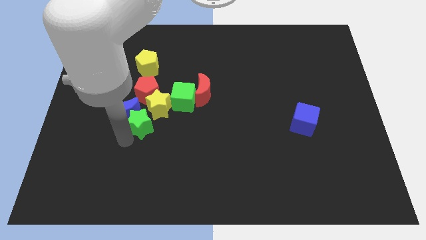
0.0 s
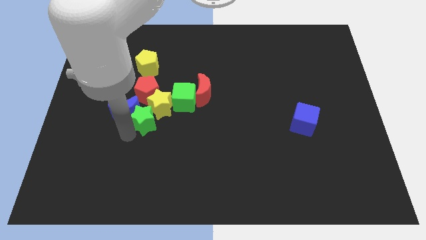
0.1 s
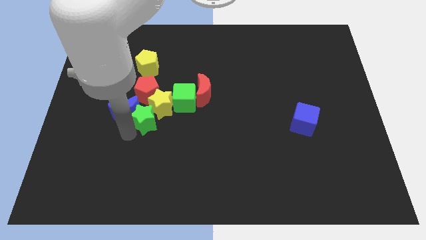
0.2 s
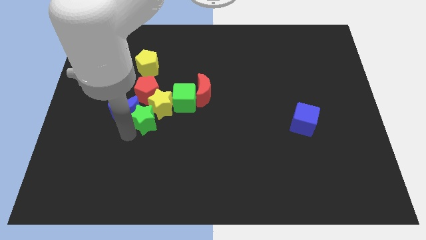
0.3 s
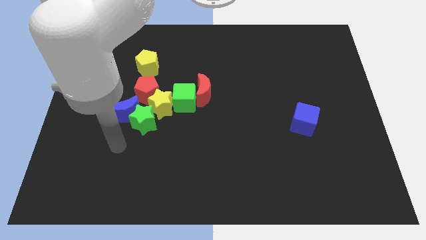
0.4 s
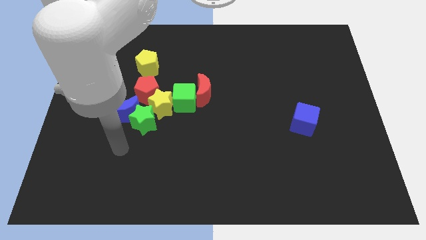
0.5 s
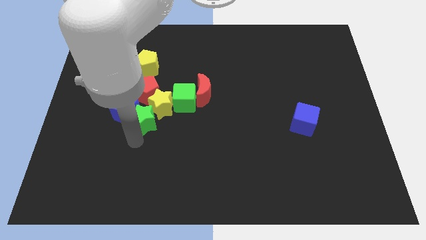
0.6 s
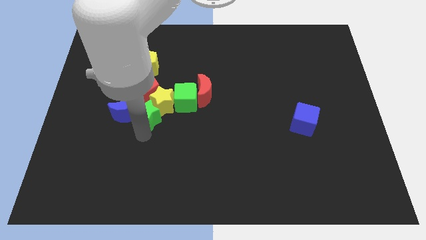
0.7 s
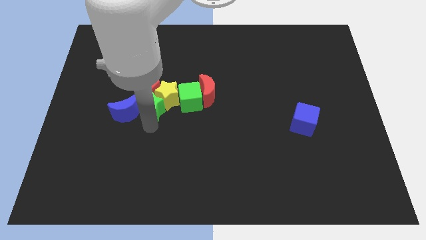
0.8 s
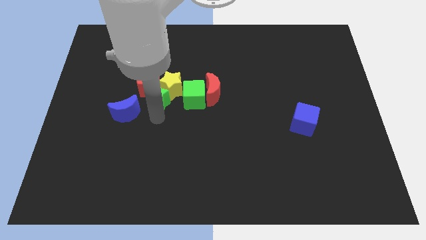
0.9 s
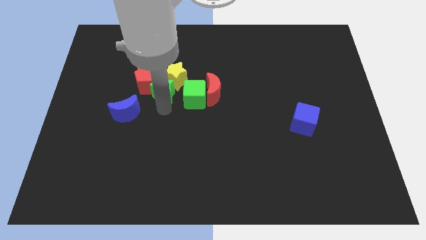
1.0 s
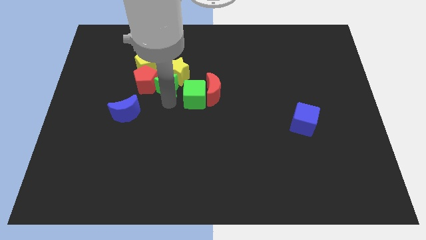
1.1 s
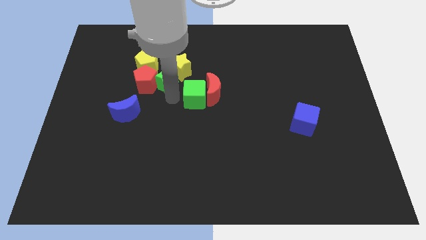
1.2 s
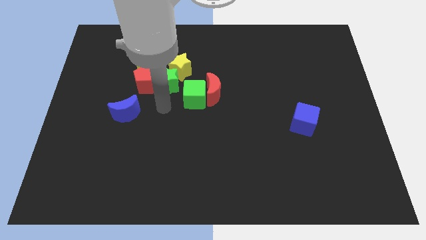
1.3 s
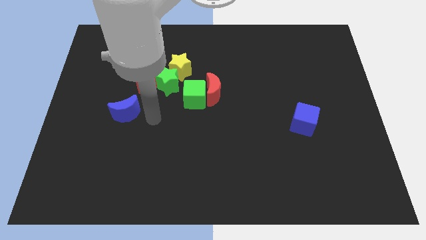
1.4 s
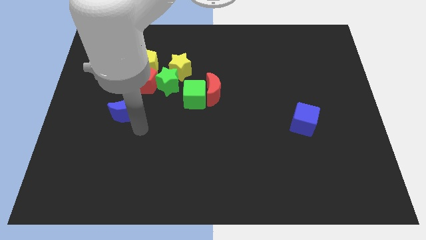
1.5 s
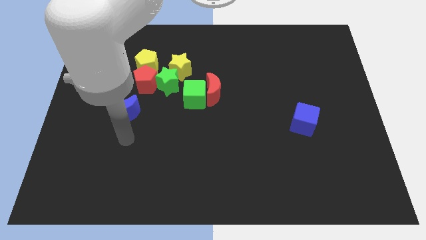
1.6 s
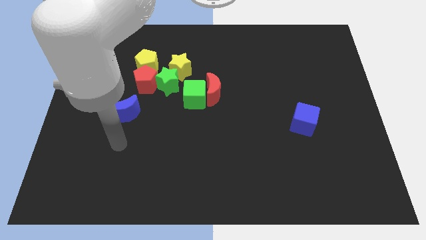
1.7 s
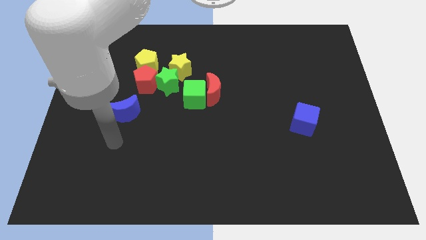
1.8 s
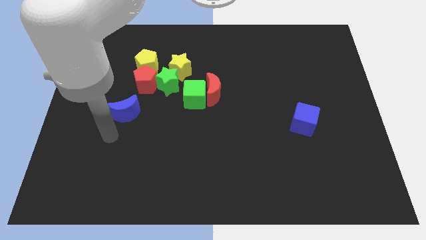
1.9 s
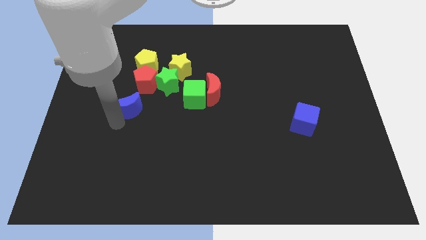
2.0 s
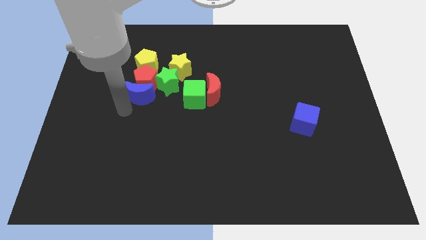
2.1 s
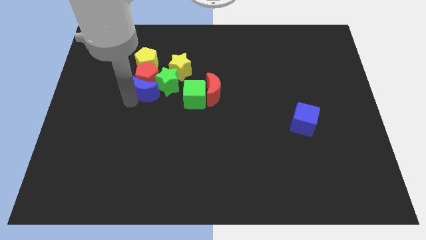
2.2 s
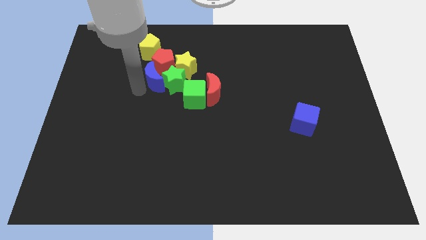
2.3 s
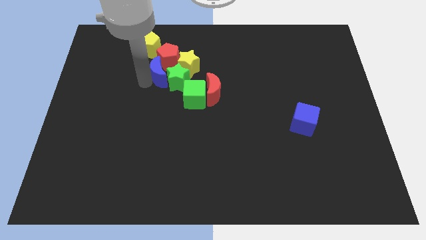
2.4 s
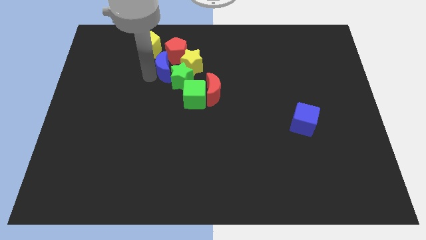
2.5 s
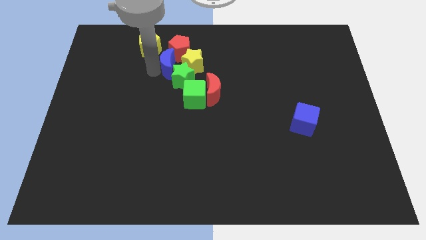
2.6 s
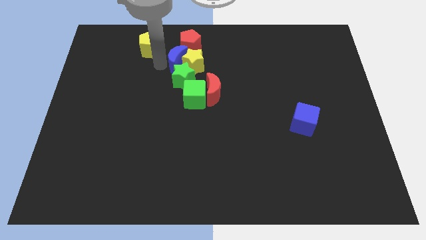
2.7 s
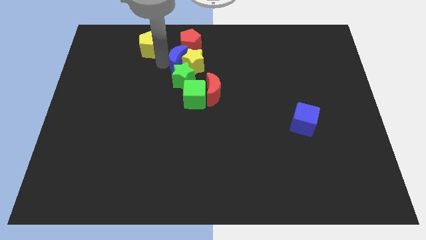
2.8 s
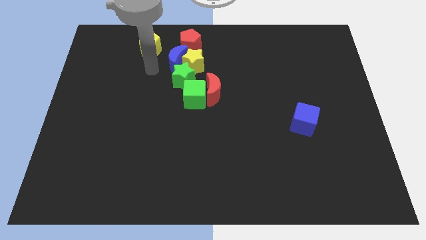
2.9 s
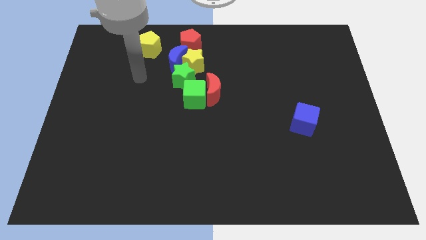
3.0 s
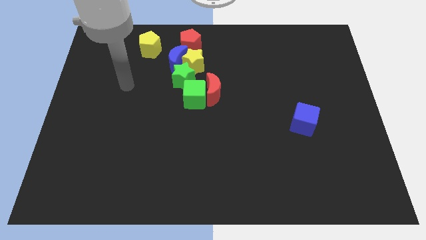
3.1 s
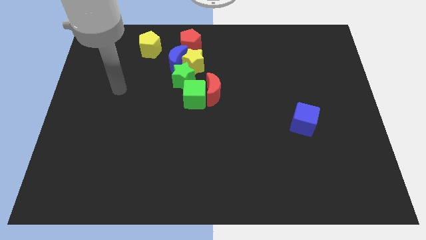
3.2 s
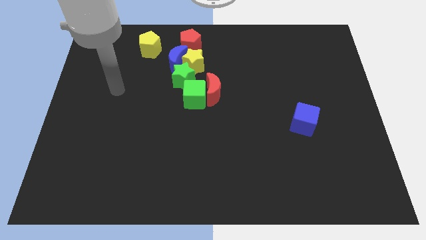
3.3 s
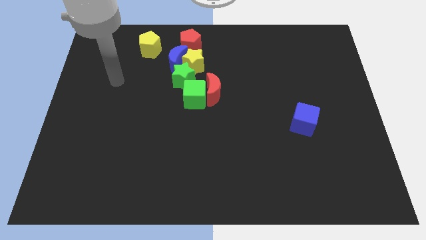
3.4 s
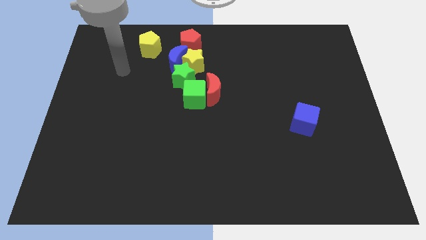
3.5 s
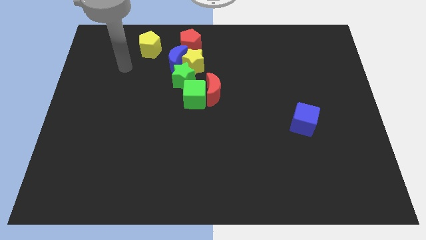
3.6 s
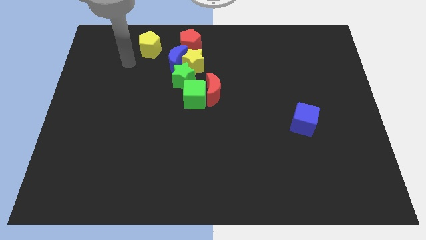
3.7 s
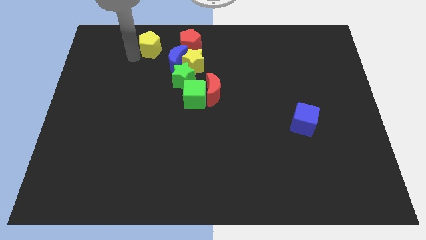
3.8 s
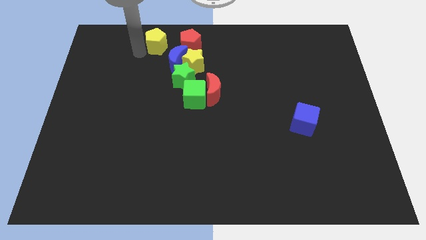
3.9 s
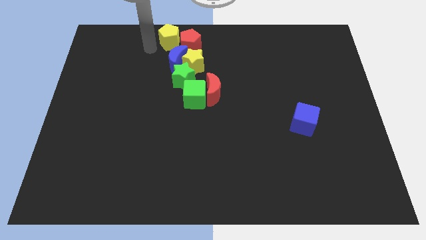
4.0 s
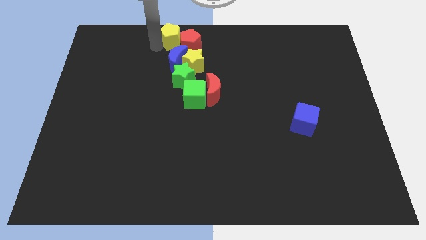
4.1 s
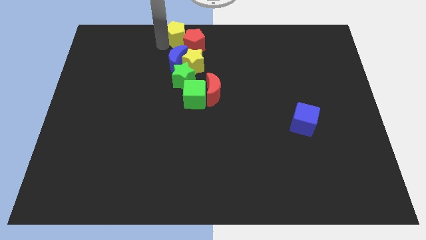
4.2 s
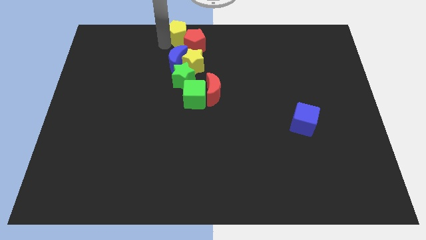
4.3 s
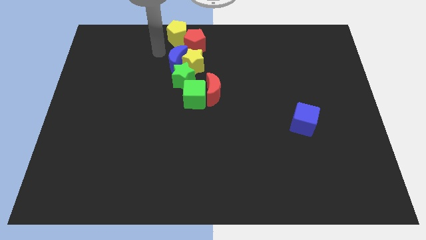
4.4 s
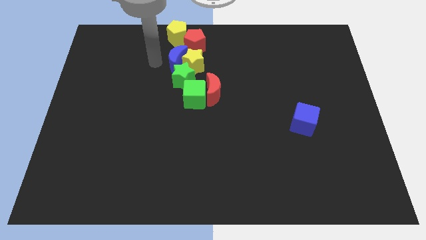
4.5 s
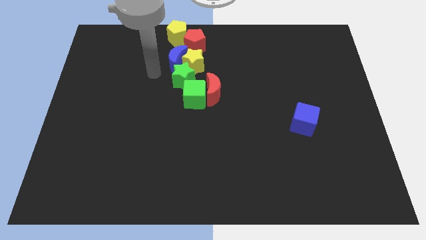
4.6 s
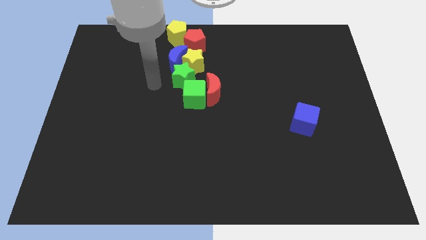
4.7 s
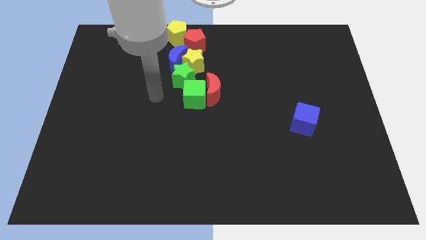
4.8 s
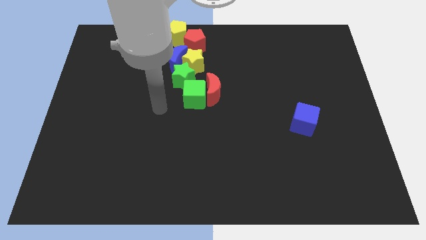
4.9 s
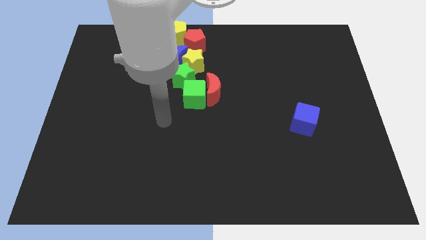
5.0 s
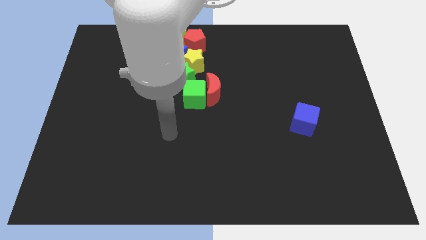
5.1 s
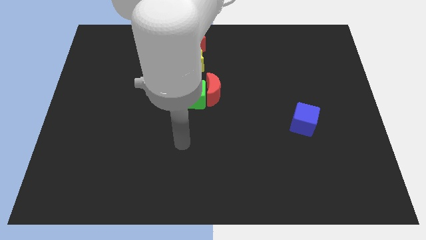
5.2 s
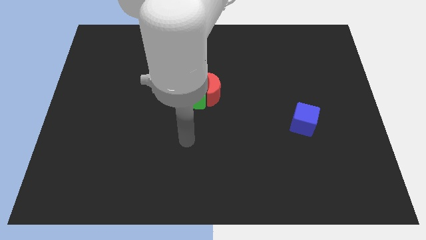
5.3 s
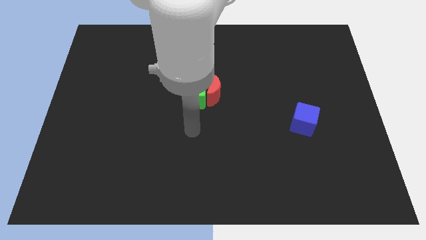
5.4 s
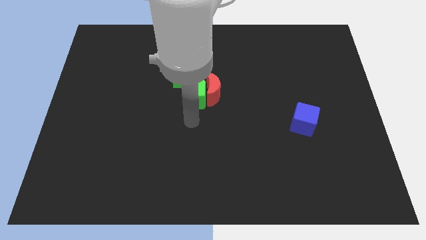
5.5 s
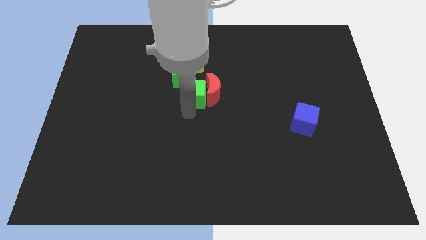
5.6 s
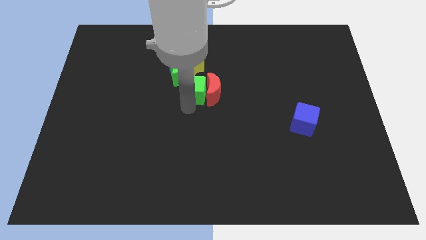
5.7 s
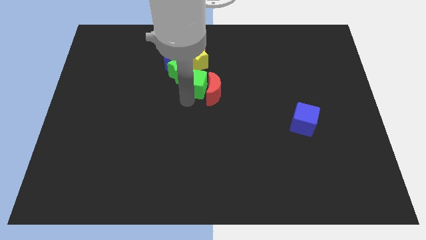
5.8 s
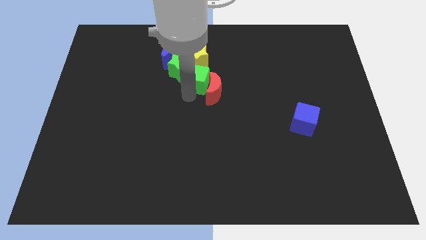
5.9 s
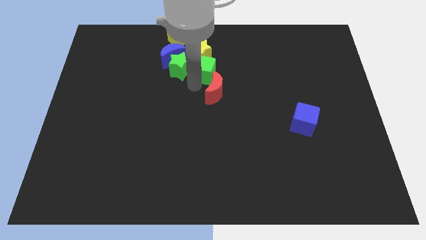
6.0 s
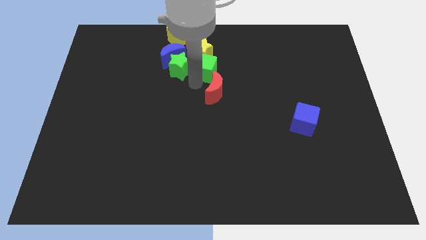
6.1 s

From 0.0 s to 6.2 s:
push the group of blocks to the top center of the board

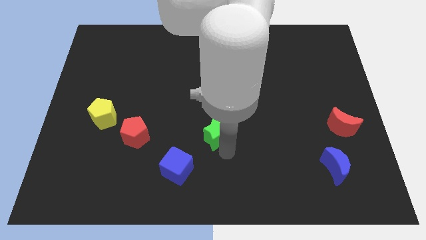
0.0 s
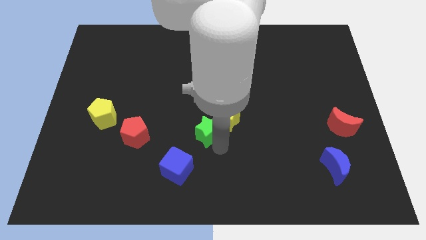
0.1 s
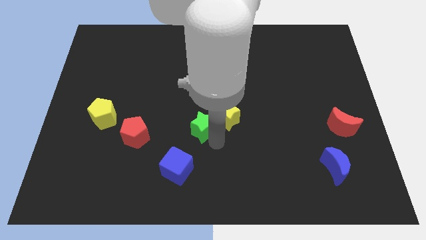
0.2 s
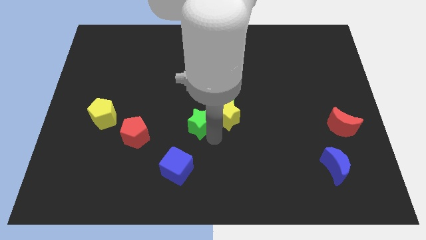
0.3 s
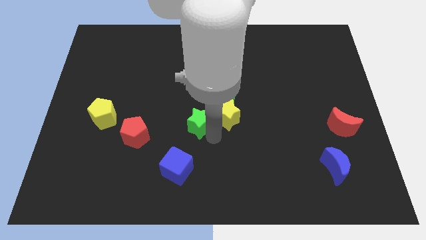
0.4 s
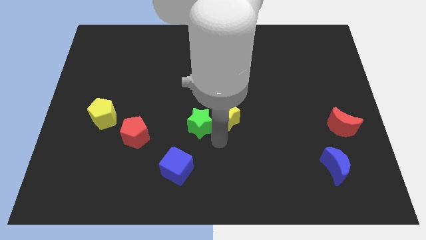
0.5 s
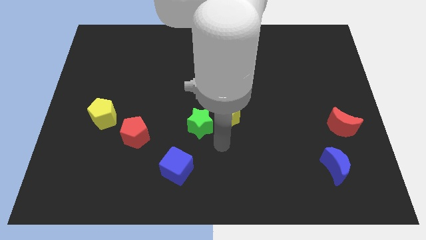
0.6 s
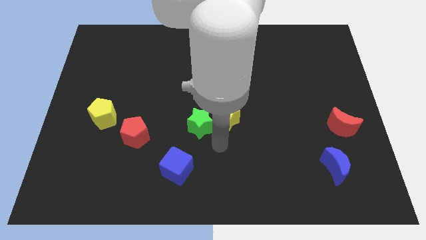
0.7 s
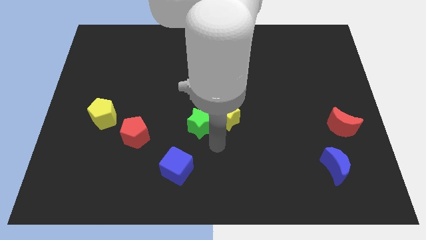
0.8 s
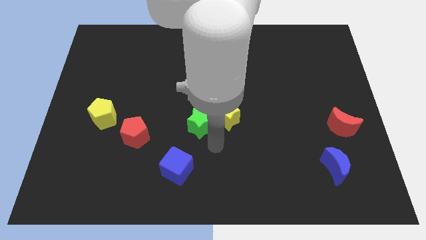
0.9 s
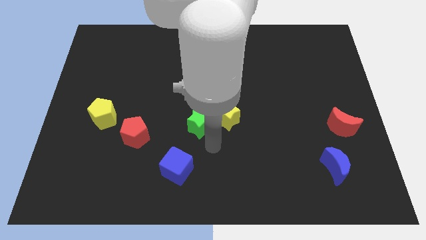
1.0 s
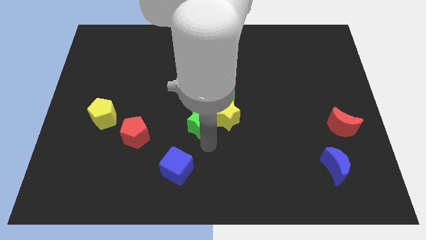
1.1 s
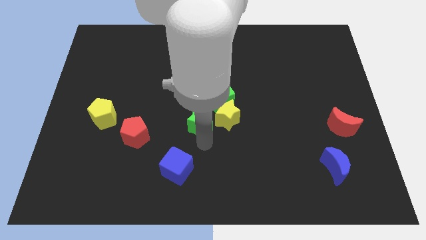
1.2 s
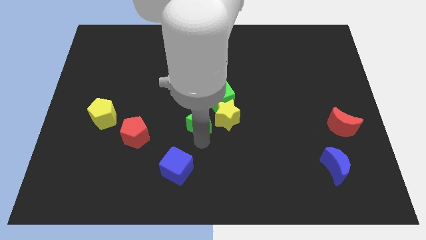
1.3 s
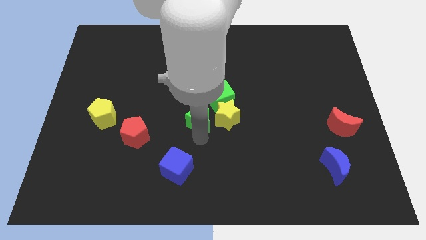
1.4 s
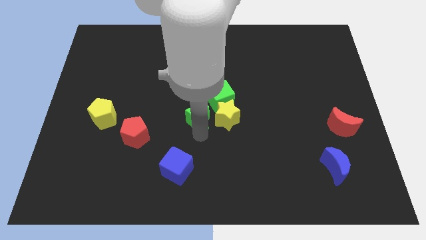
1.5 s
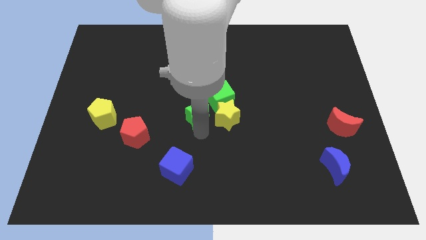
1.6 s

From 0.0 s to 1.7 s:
place the green star to the left of the yellow star

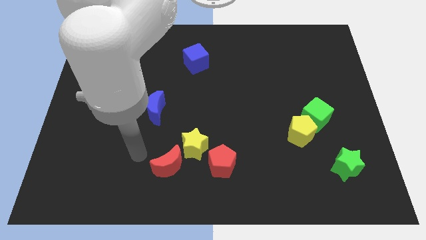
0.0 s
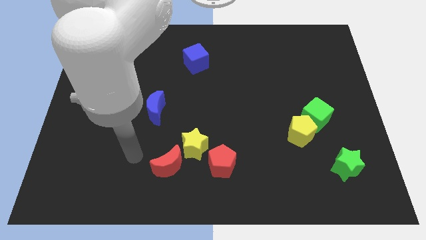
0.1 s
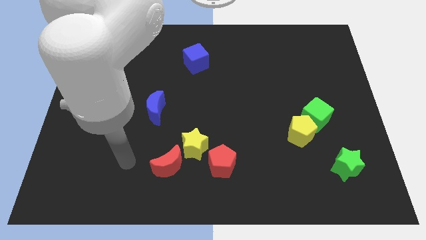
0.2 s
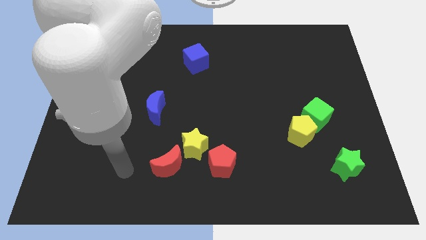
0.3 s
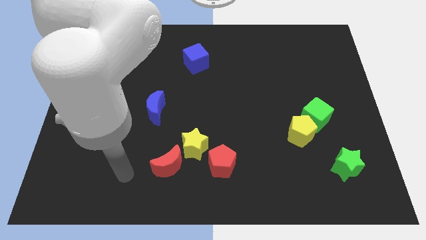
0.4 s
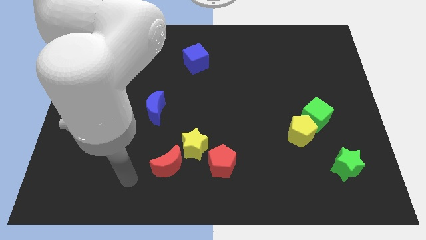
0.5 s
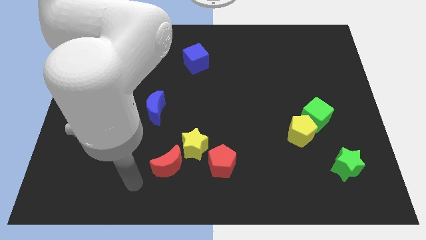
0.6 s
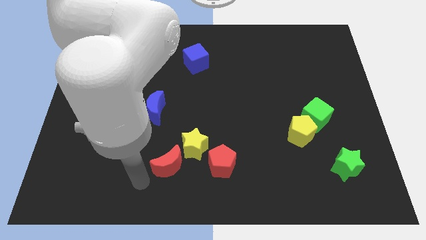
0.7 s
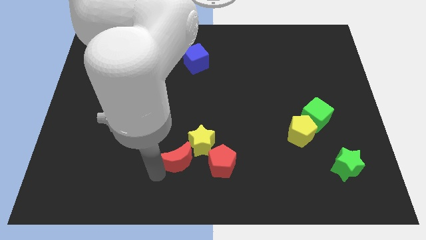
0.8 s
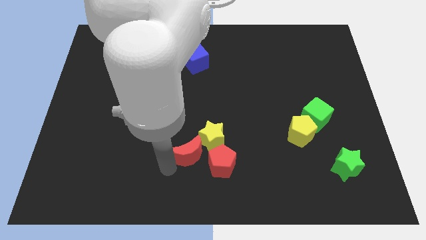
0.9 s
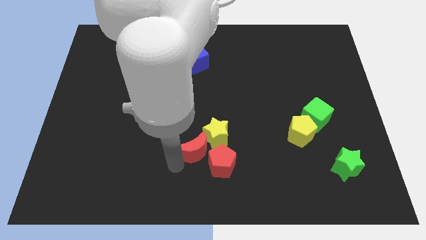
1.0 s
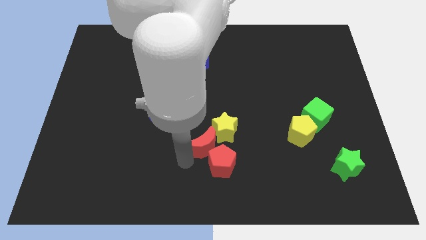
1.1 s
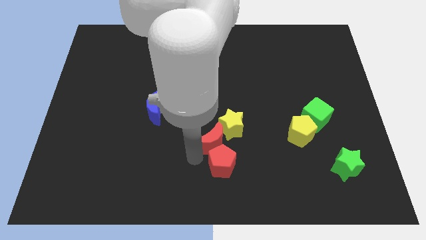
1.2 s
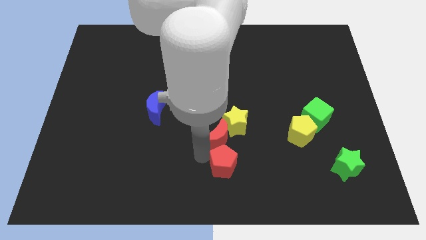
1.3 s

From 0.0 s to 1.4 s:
push the red moon into the yellow star
